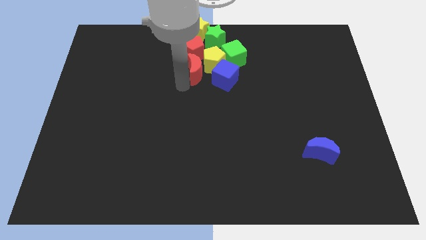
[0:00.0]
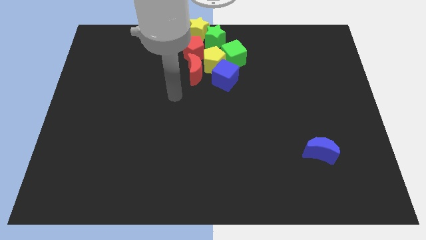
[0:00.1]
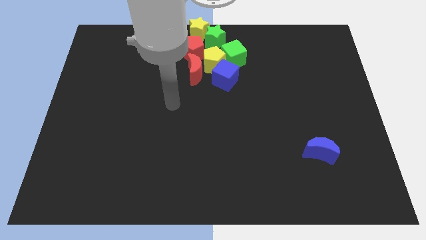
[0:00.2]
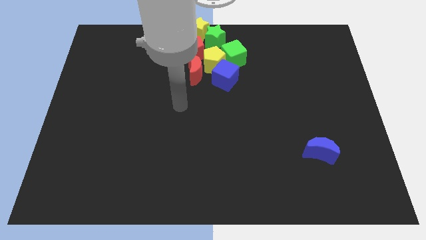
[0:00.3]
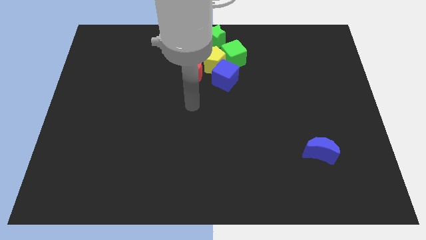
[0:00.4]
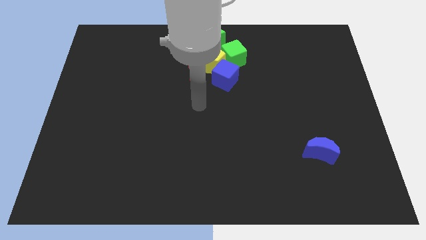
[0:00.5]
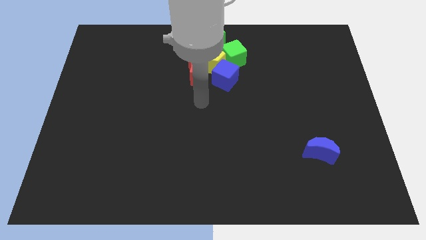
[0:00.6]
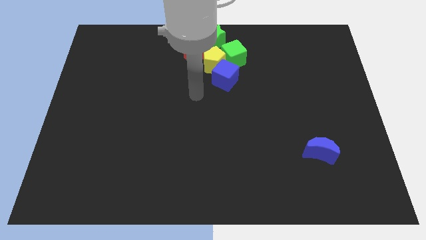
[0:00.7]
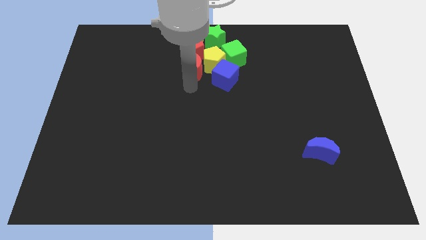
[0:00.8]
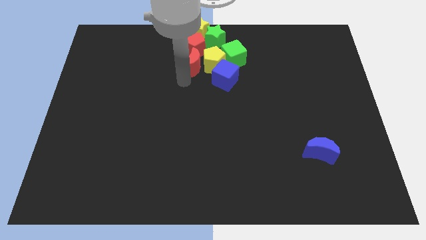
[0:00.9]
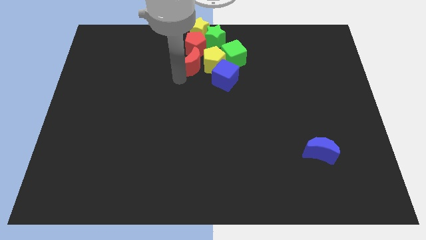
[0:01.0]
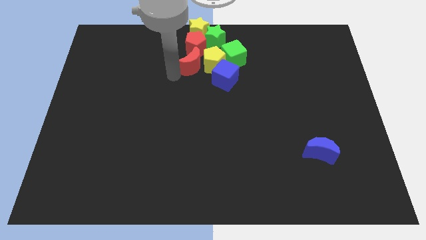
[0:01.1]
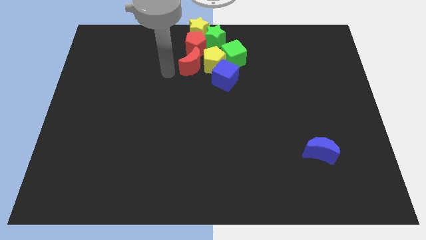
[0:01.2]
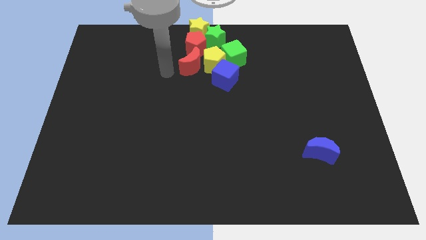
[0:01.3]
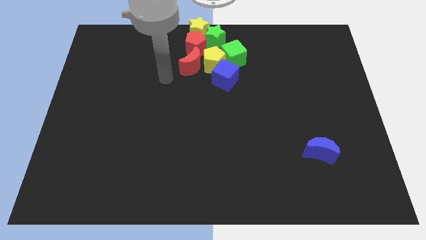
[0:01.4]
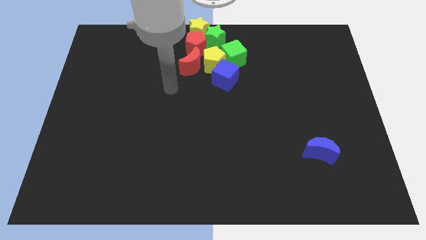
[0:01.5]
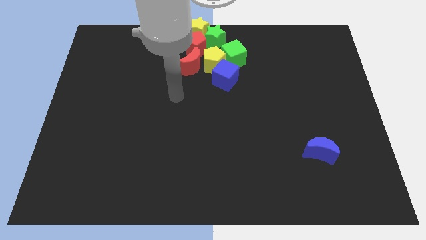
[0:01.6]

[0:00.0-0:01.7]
push the red pentagon with the red crescent slightly into the yellow star

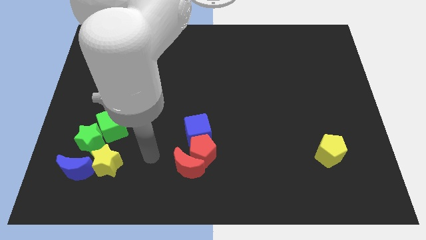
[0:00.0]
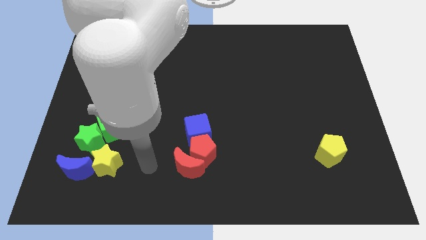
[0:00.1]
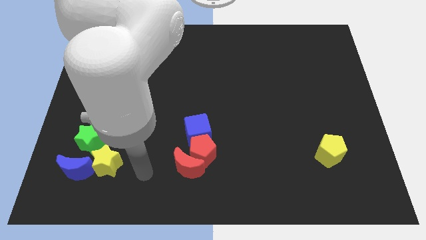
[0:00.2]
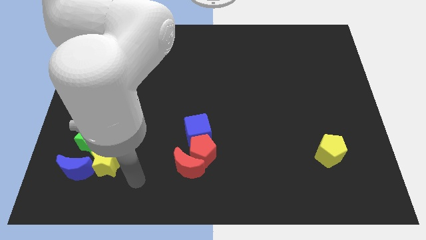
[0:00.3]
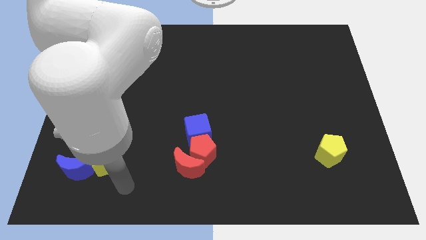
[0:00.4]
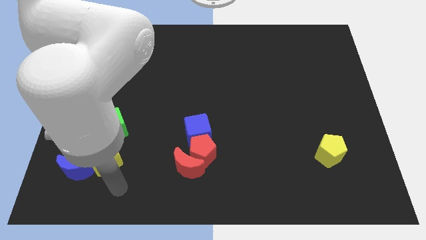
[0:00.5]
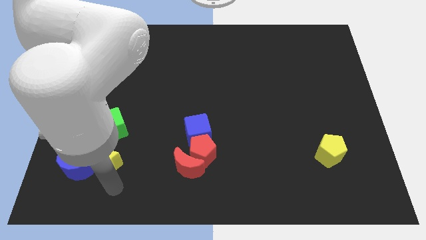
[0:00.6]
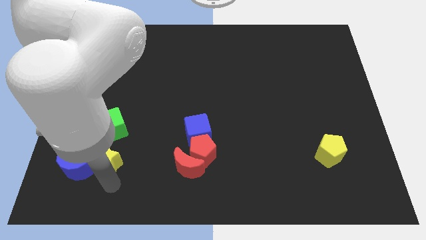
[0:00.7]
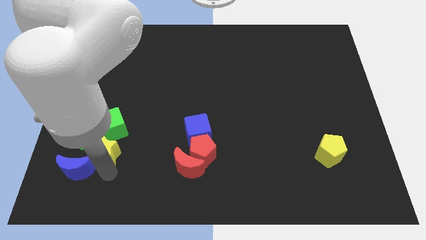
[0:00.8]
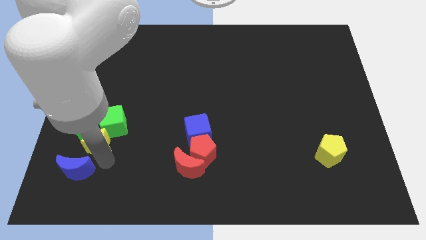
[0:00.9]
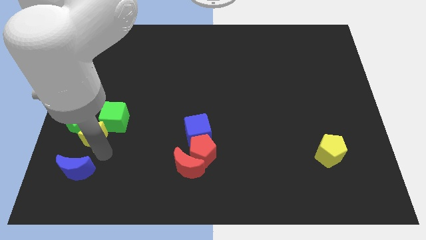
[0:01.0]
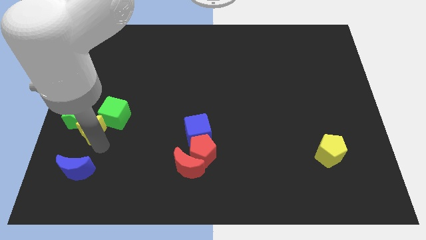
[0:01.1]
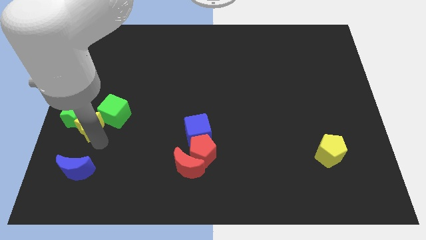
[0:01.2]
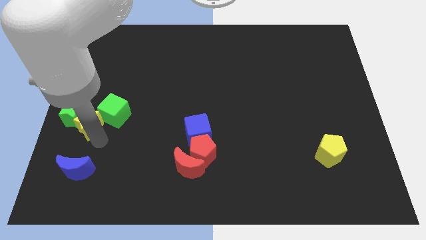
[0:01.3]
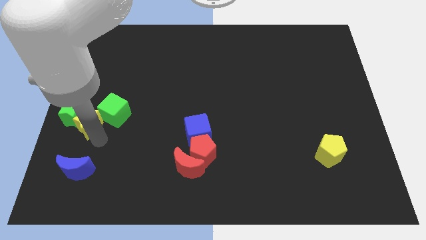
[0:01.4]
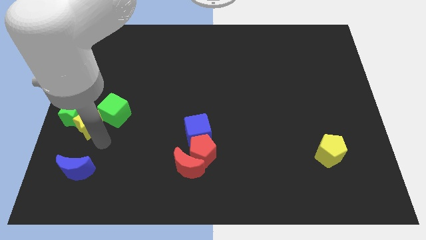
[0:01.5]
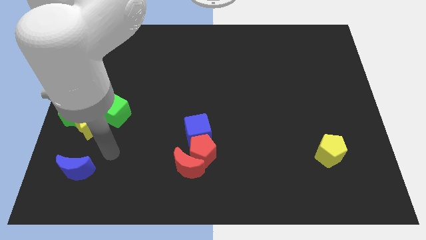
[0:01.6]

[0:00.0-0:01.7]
slide the yellow star into the green blocks

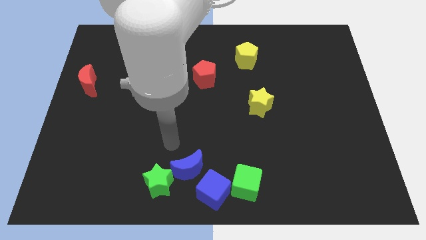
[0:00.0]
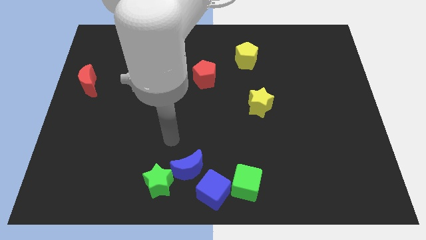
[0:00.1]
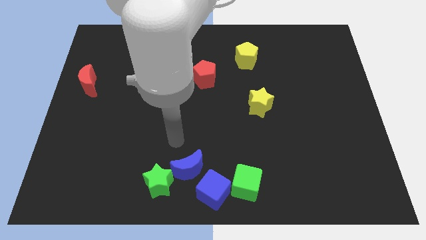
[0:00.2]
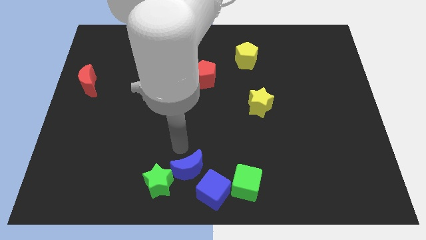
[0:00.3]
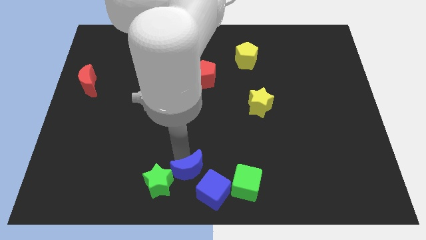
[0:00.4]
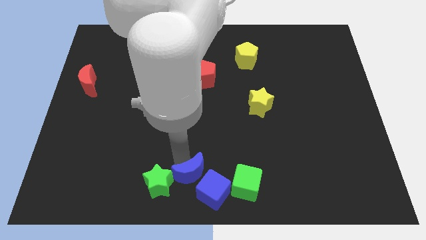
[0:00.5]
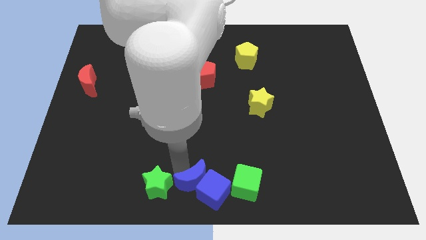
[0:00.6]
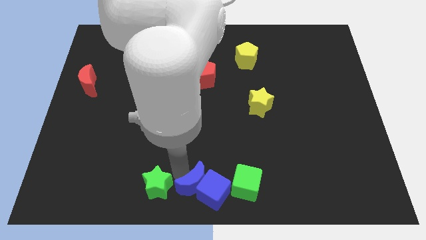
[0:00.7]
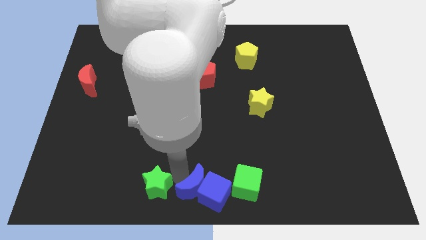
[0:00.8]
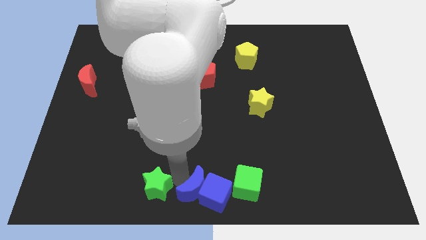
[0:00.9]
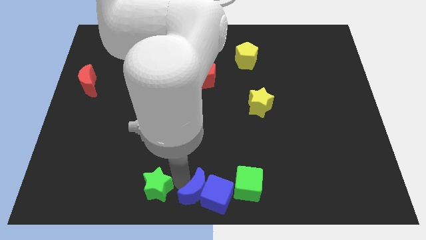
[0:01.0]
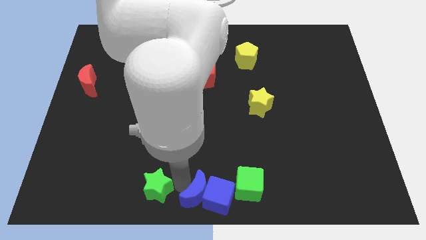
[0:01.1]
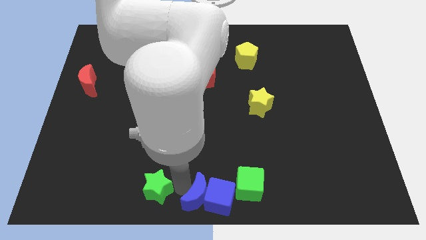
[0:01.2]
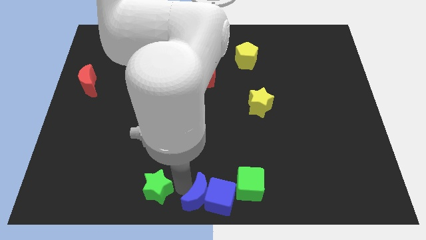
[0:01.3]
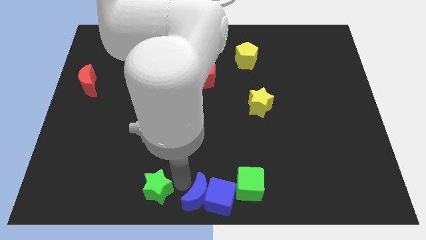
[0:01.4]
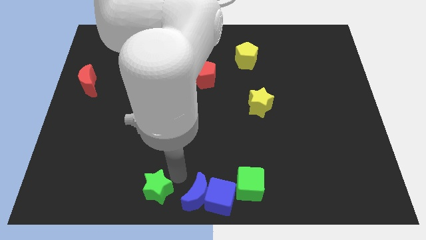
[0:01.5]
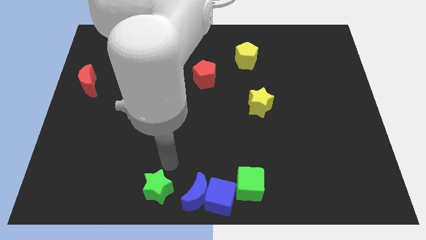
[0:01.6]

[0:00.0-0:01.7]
push the blue crescent into the blue cube

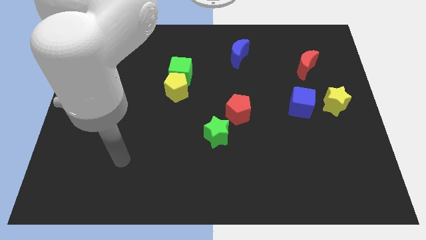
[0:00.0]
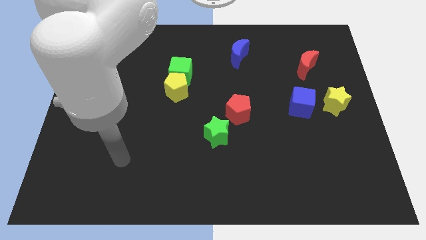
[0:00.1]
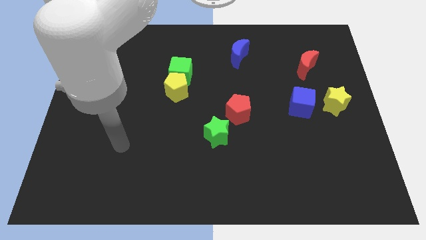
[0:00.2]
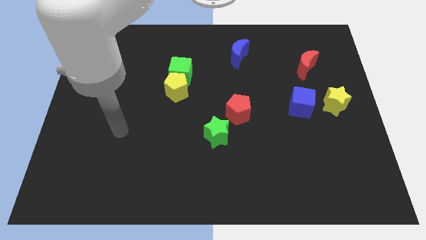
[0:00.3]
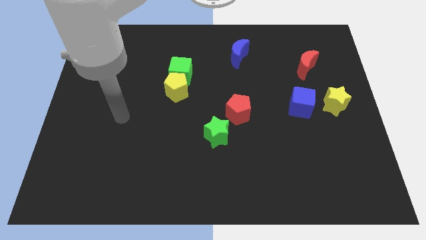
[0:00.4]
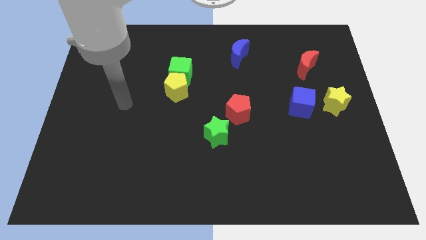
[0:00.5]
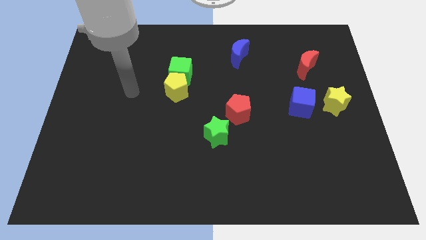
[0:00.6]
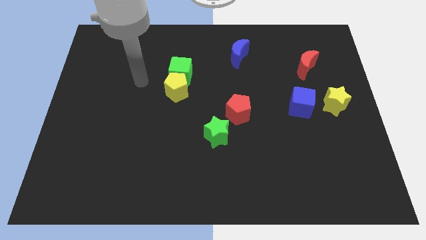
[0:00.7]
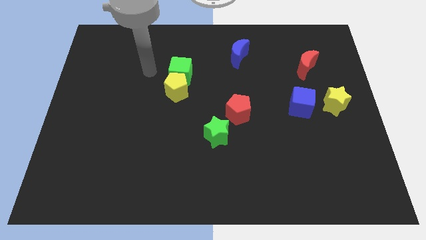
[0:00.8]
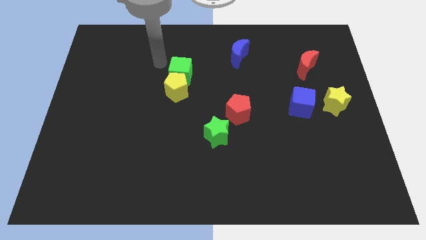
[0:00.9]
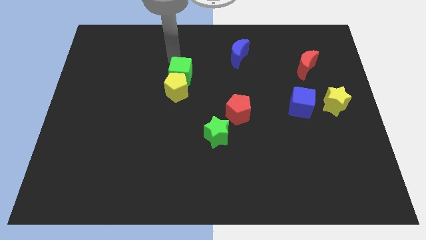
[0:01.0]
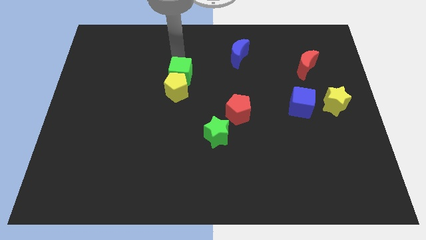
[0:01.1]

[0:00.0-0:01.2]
place your hand above the green cube

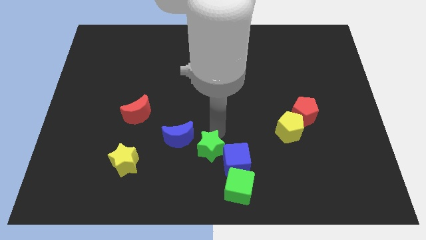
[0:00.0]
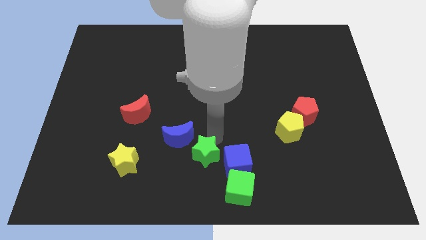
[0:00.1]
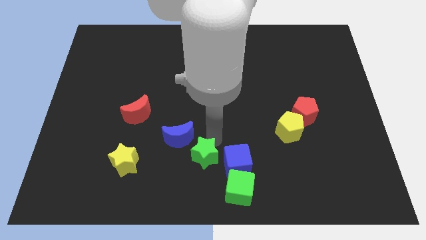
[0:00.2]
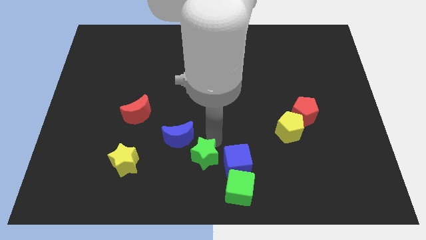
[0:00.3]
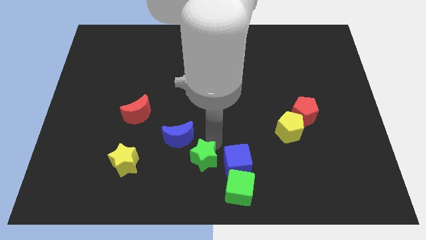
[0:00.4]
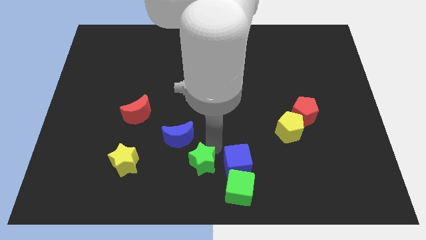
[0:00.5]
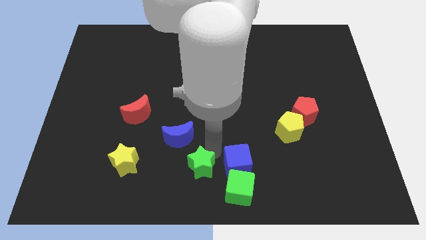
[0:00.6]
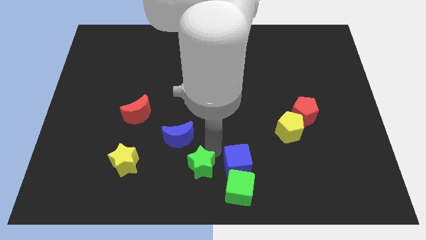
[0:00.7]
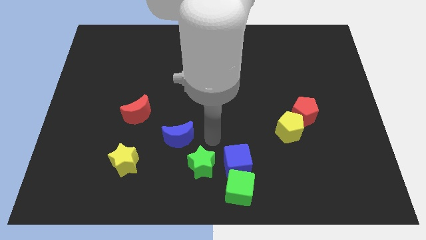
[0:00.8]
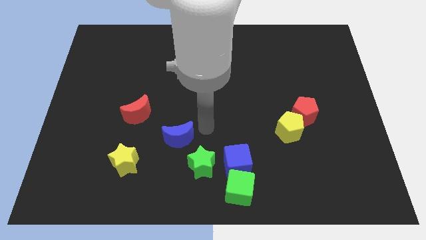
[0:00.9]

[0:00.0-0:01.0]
place the green star to the left of the blue cube

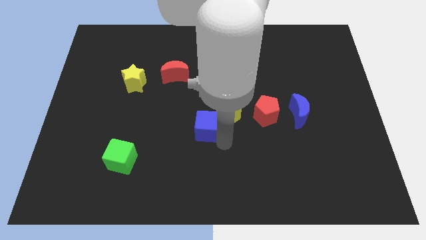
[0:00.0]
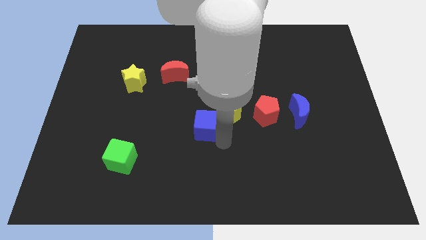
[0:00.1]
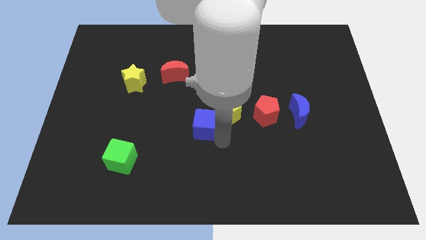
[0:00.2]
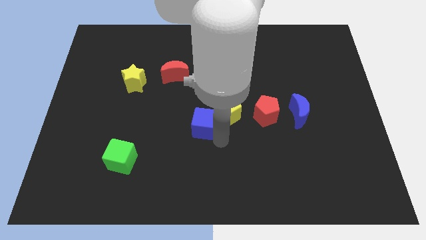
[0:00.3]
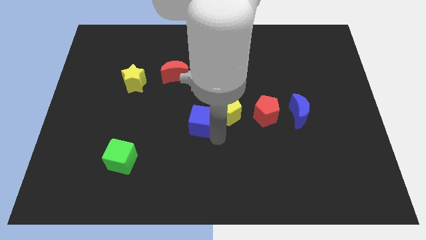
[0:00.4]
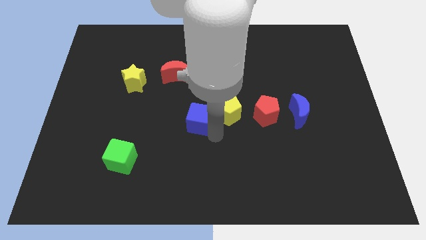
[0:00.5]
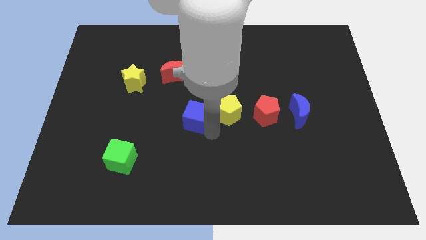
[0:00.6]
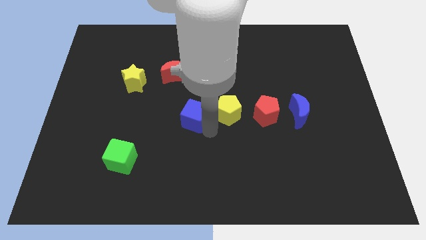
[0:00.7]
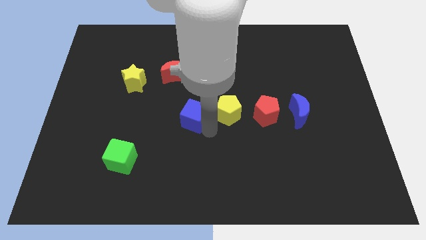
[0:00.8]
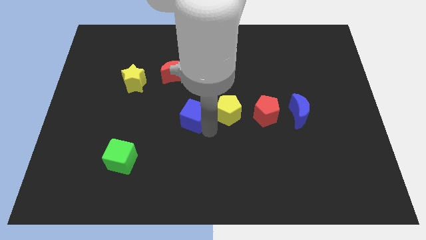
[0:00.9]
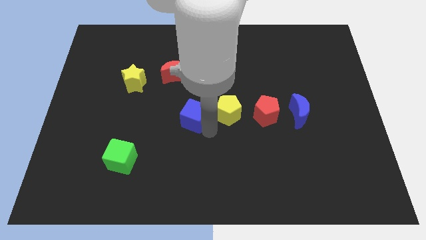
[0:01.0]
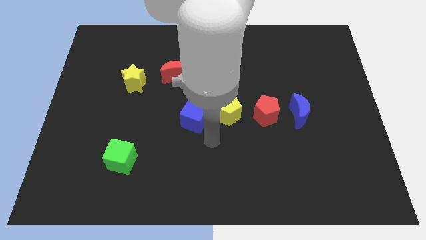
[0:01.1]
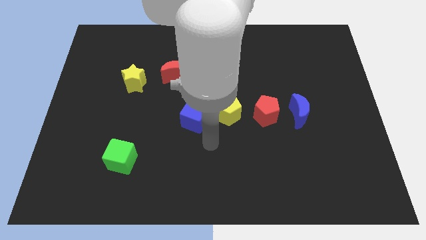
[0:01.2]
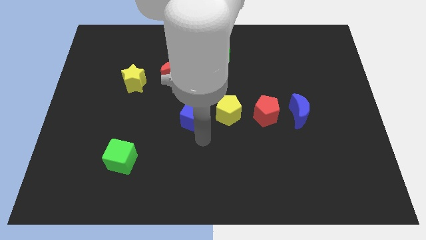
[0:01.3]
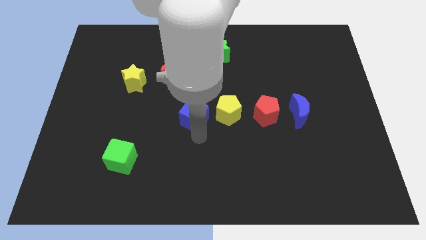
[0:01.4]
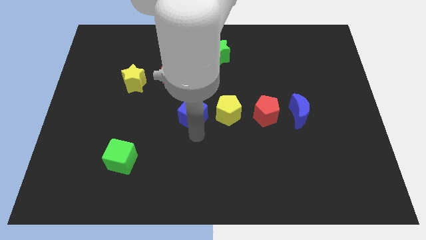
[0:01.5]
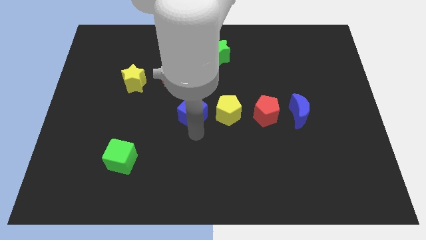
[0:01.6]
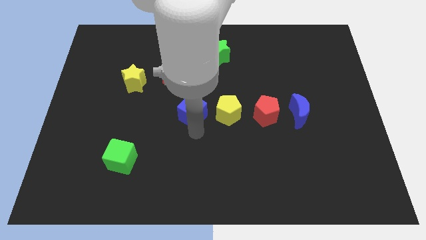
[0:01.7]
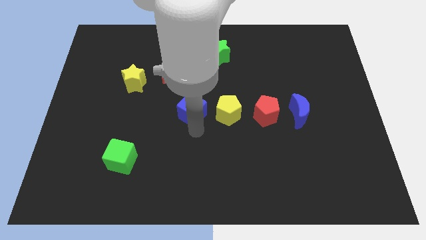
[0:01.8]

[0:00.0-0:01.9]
move the blue cube to the left side of the yellow pentagon
